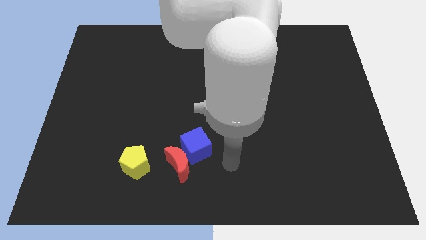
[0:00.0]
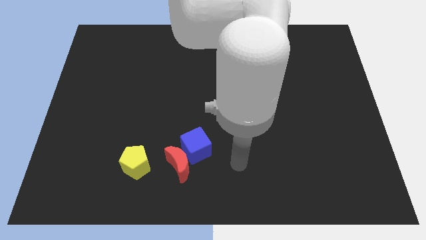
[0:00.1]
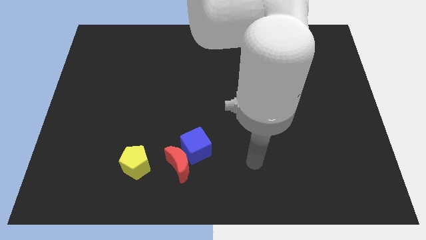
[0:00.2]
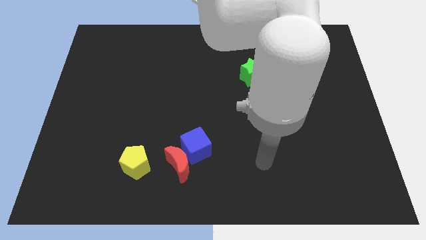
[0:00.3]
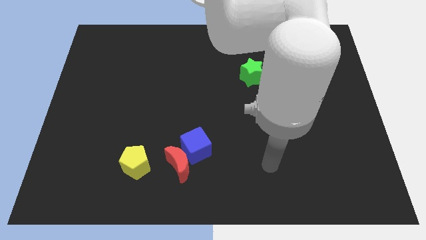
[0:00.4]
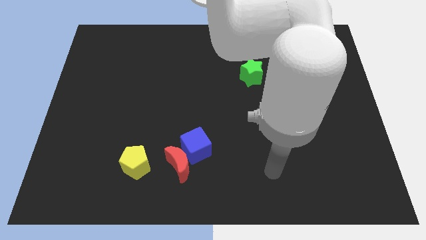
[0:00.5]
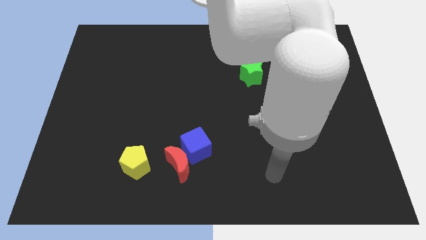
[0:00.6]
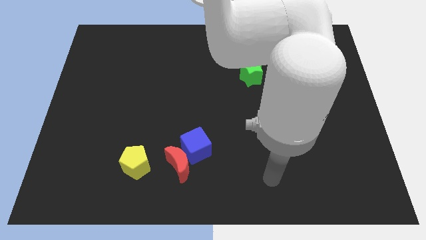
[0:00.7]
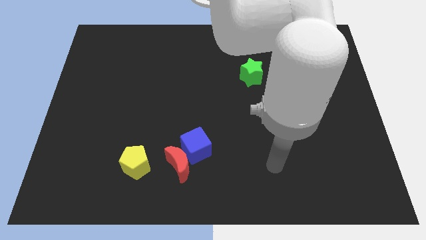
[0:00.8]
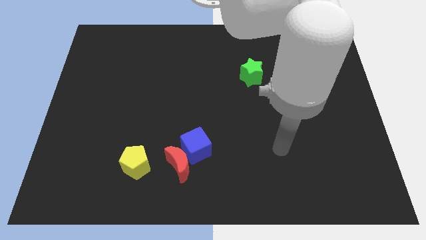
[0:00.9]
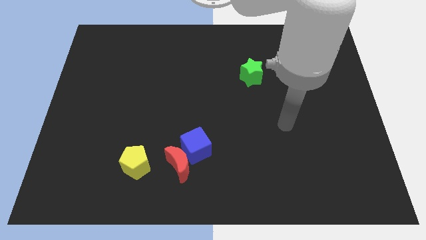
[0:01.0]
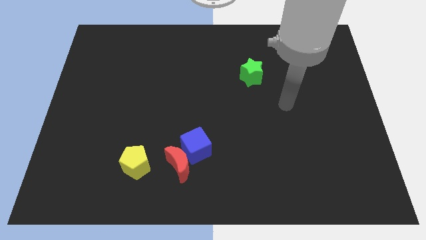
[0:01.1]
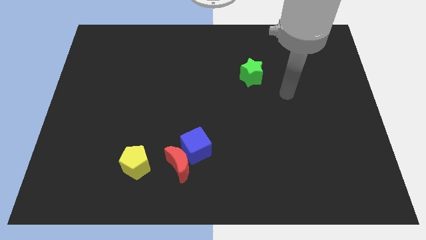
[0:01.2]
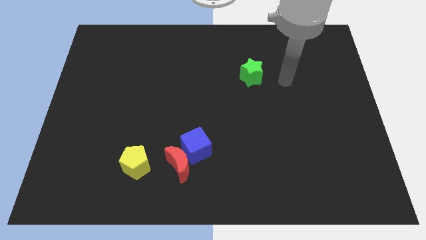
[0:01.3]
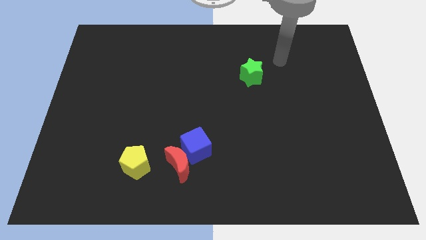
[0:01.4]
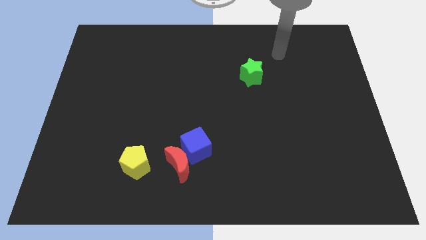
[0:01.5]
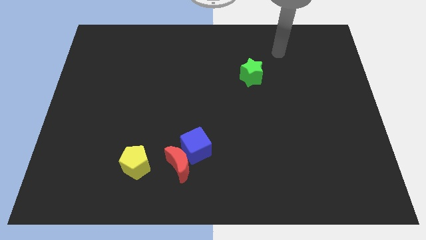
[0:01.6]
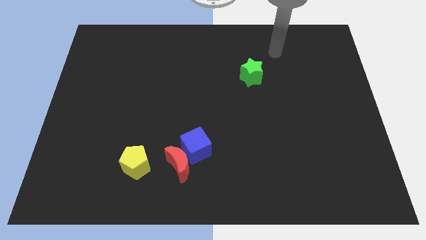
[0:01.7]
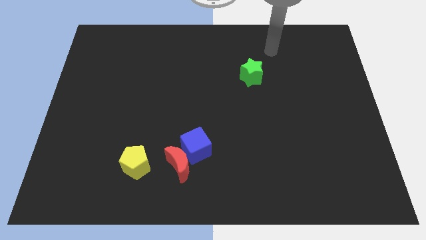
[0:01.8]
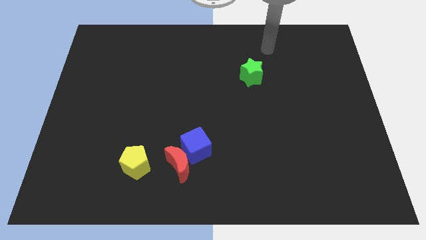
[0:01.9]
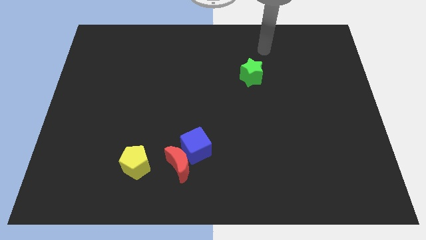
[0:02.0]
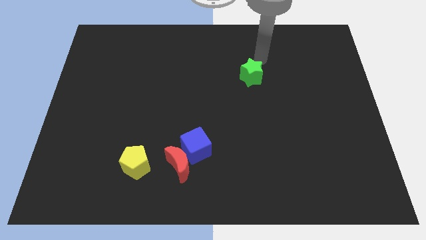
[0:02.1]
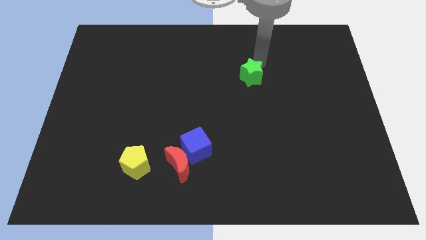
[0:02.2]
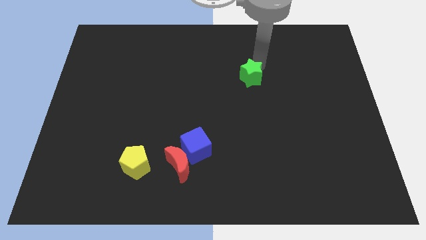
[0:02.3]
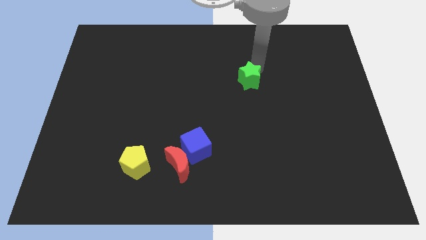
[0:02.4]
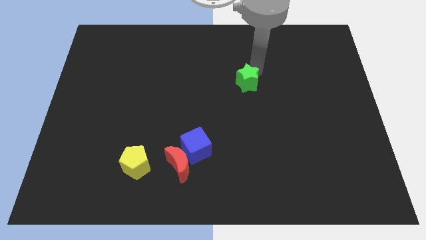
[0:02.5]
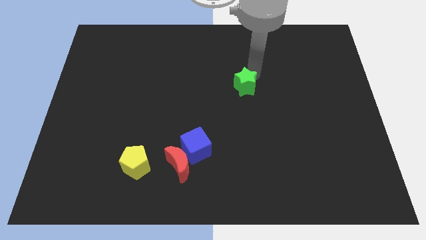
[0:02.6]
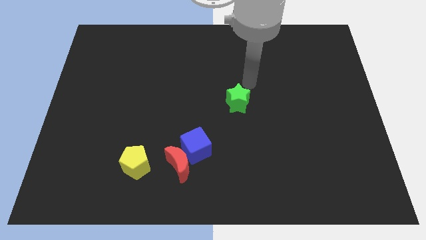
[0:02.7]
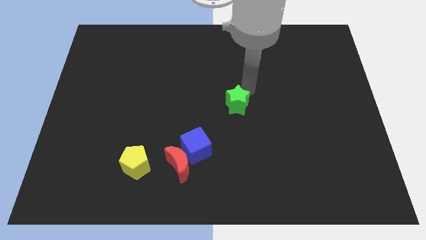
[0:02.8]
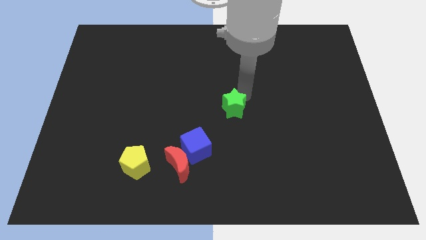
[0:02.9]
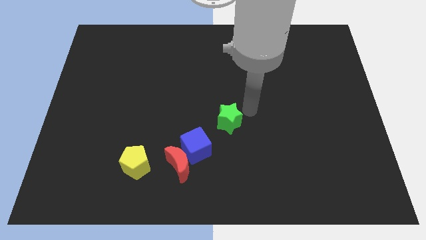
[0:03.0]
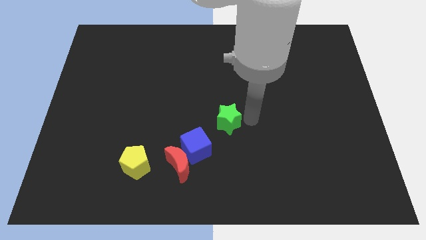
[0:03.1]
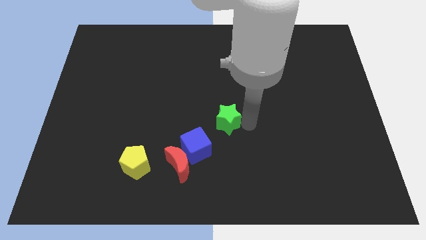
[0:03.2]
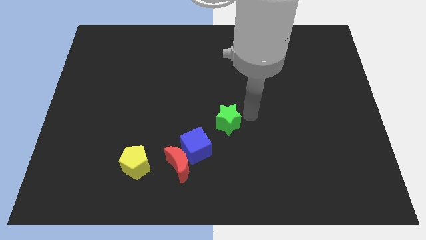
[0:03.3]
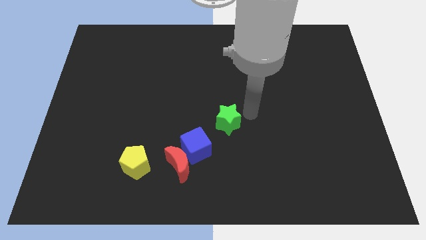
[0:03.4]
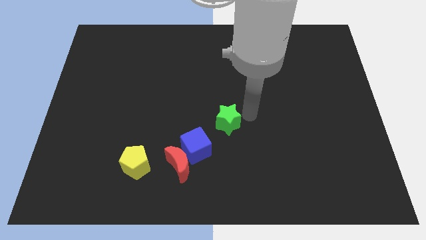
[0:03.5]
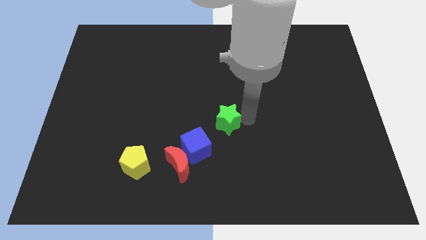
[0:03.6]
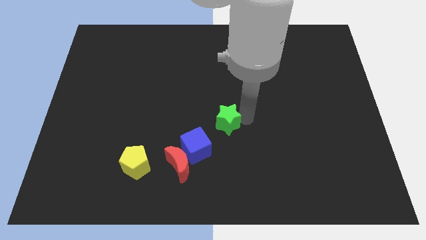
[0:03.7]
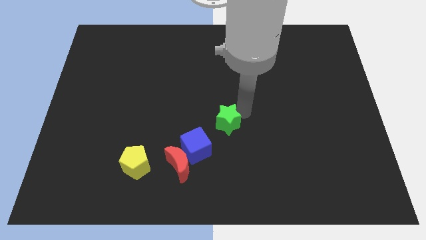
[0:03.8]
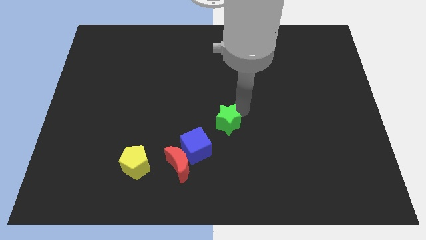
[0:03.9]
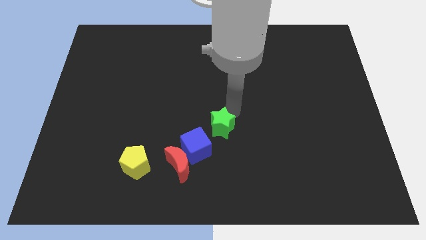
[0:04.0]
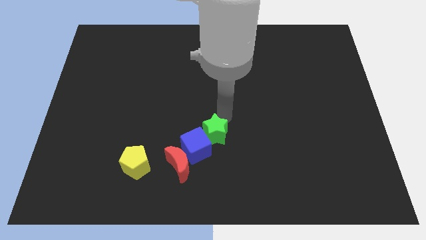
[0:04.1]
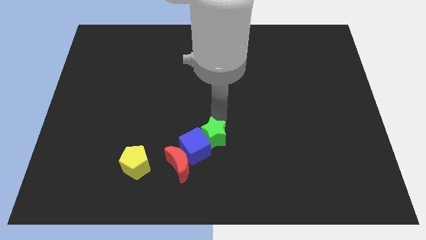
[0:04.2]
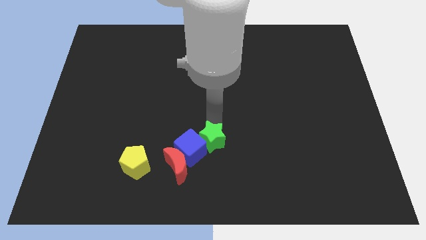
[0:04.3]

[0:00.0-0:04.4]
push the star towards the blue block

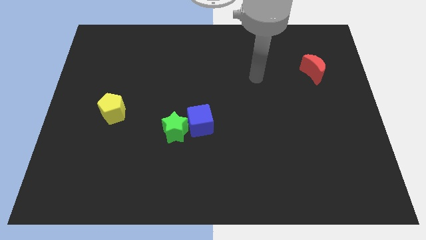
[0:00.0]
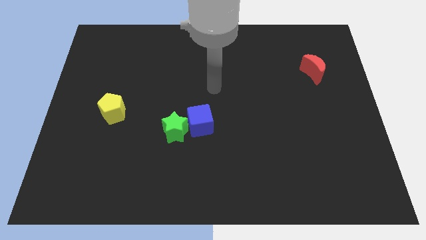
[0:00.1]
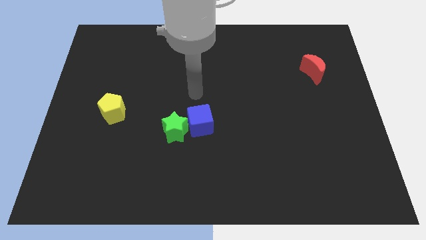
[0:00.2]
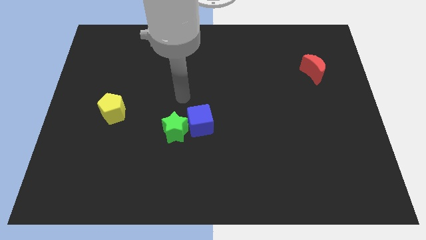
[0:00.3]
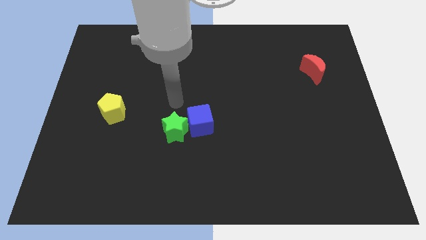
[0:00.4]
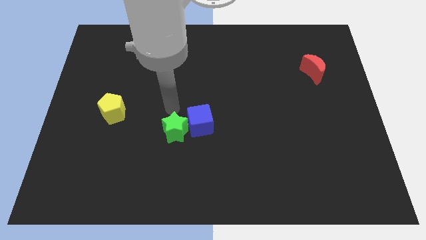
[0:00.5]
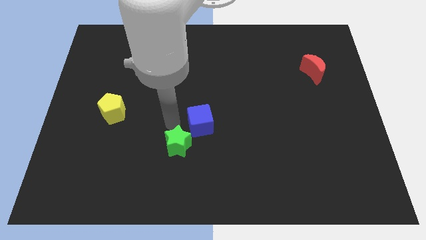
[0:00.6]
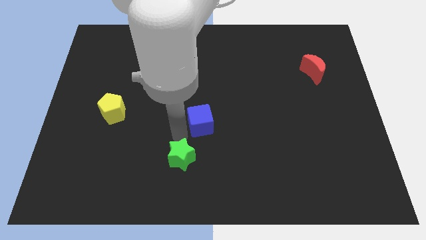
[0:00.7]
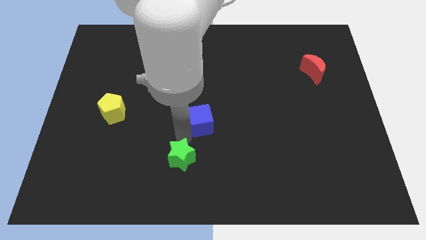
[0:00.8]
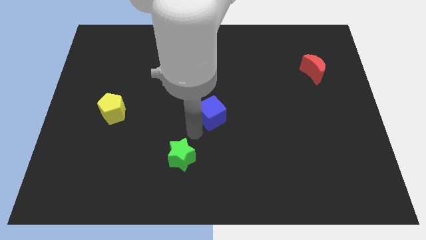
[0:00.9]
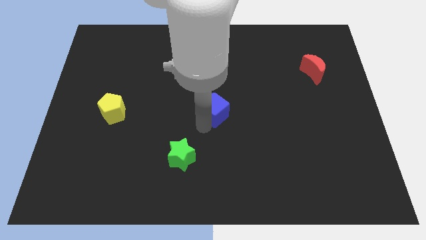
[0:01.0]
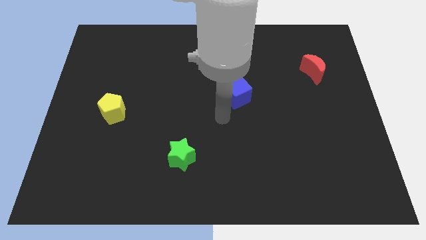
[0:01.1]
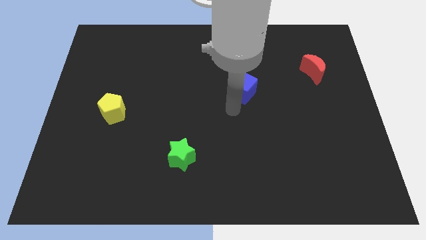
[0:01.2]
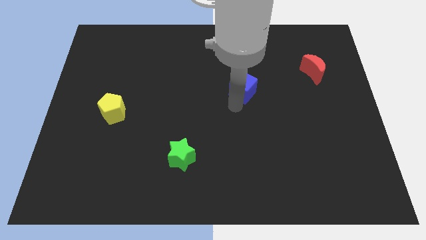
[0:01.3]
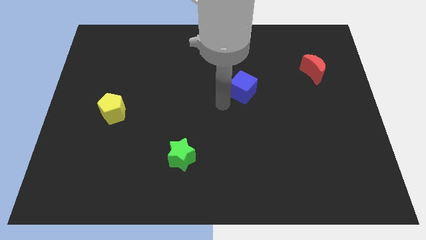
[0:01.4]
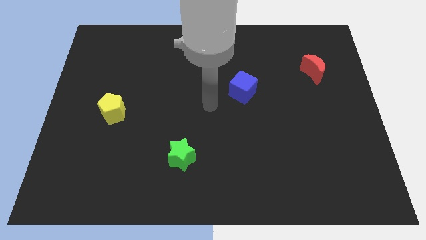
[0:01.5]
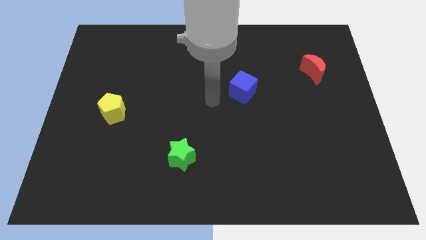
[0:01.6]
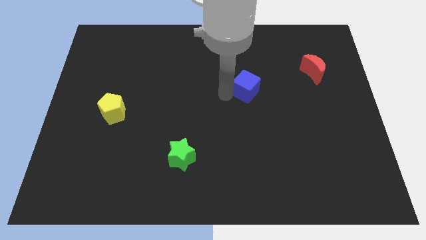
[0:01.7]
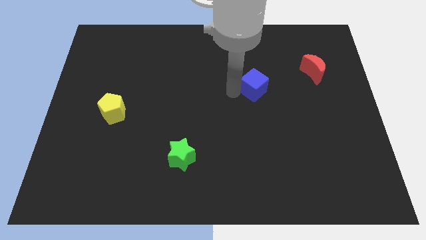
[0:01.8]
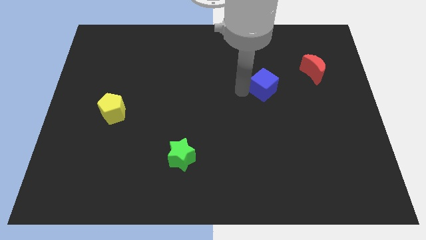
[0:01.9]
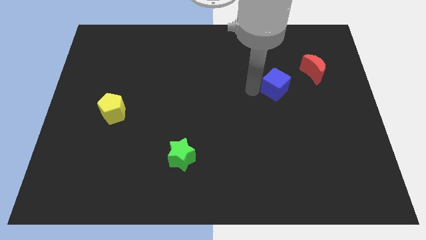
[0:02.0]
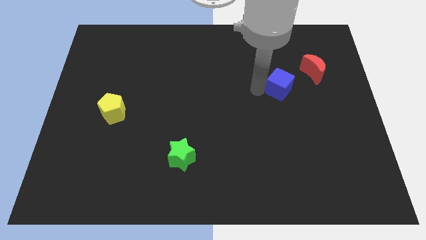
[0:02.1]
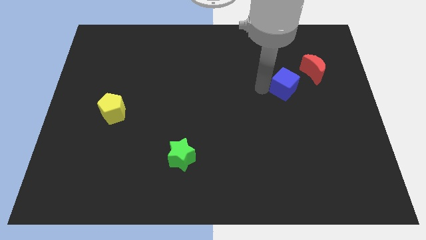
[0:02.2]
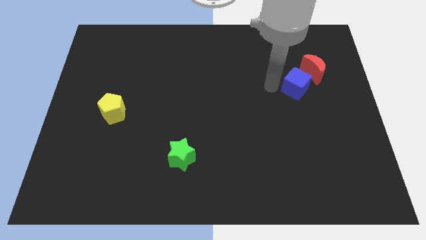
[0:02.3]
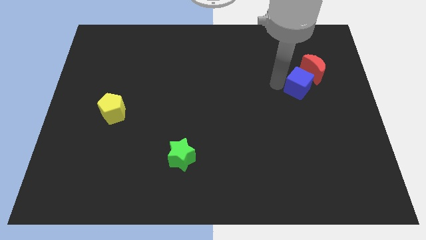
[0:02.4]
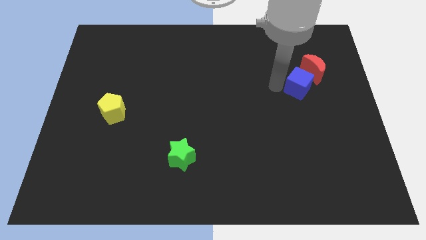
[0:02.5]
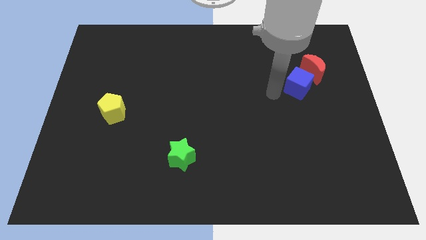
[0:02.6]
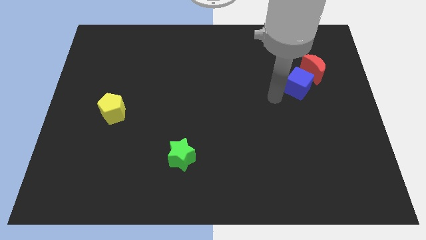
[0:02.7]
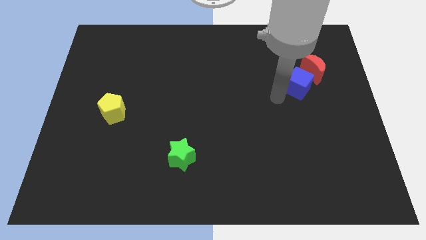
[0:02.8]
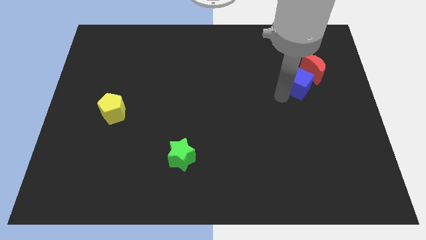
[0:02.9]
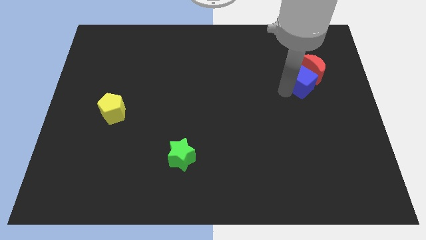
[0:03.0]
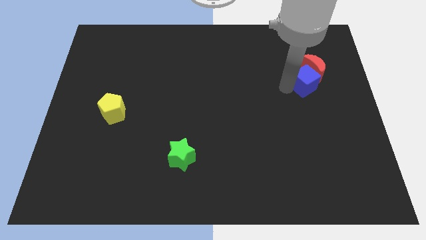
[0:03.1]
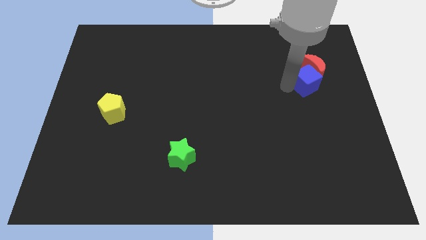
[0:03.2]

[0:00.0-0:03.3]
put the cube next to the red block

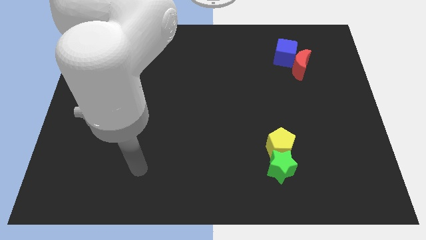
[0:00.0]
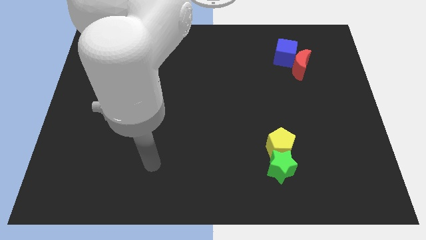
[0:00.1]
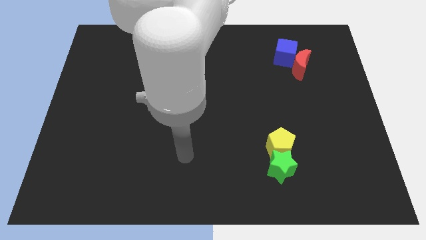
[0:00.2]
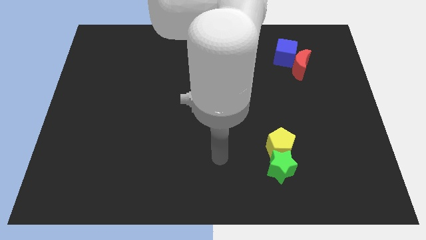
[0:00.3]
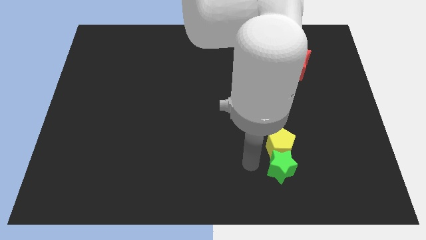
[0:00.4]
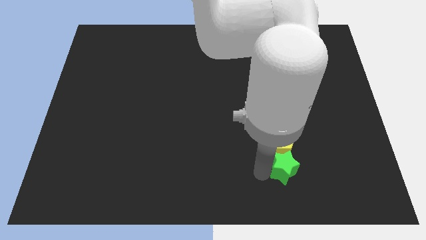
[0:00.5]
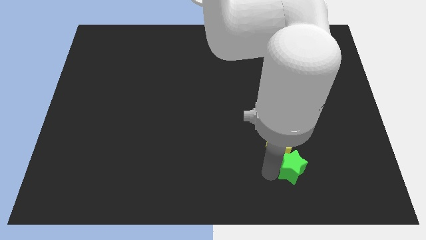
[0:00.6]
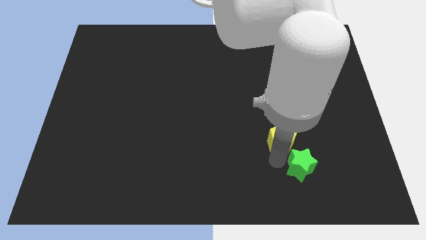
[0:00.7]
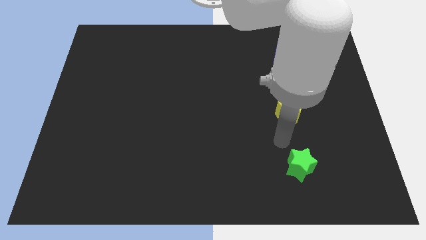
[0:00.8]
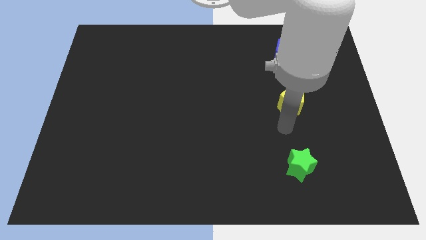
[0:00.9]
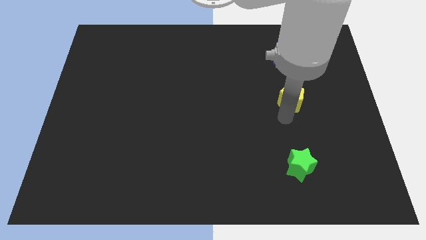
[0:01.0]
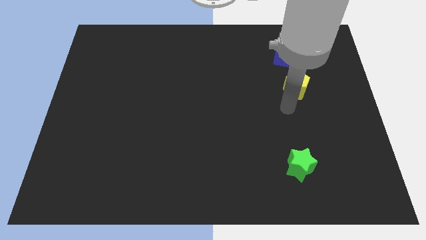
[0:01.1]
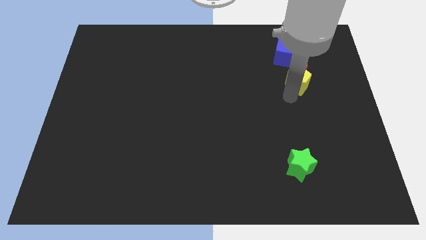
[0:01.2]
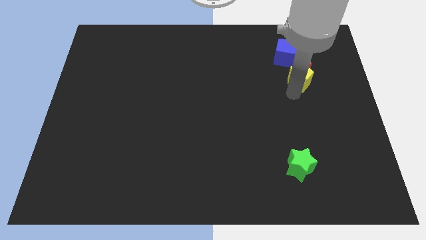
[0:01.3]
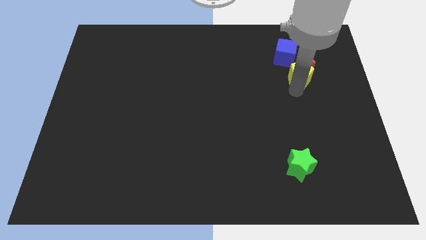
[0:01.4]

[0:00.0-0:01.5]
put the yellow block to the moon
